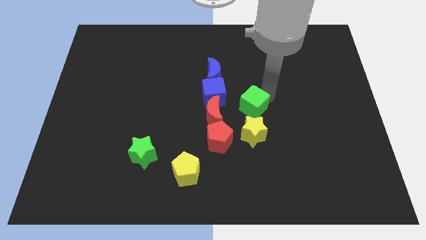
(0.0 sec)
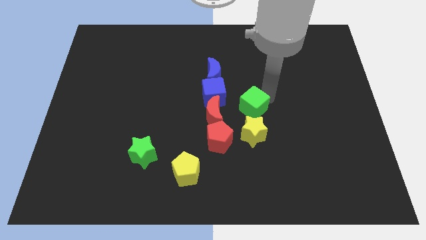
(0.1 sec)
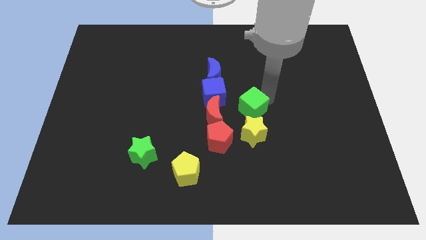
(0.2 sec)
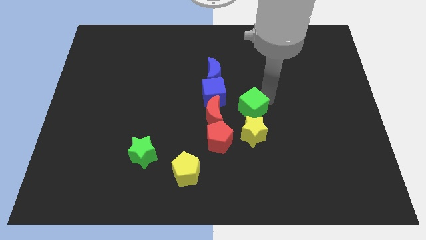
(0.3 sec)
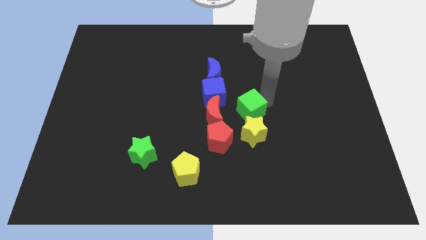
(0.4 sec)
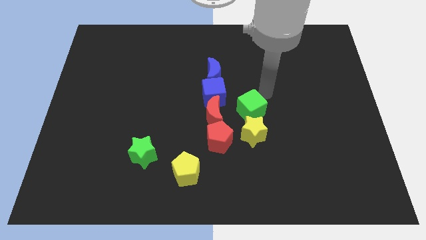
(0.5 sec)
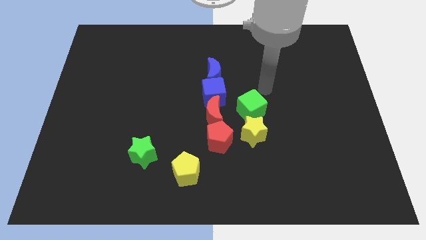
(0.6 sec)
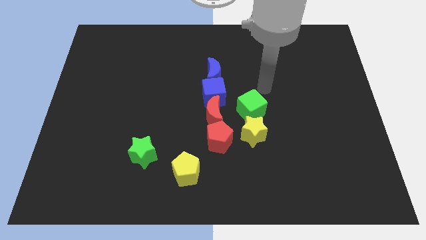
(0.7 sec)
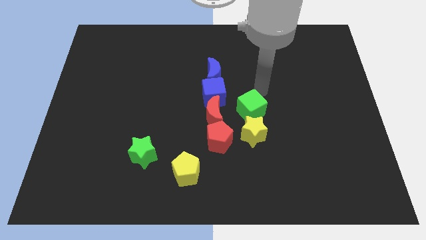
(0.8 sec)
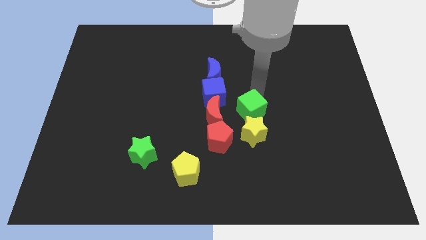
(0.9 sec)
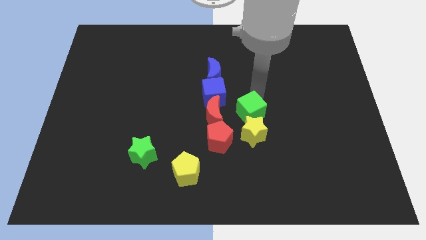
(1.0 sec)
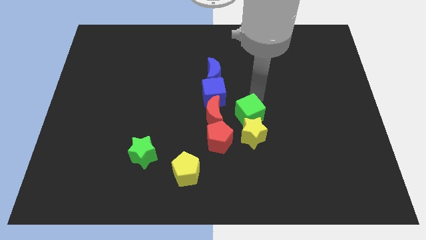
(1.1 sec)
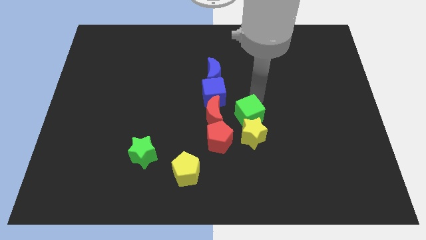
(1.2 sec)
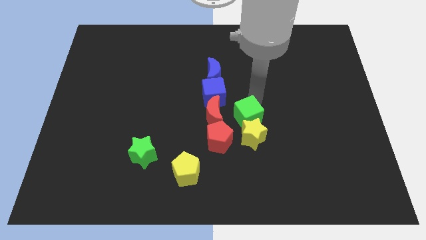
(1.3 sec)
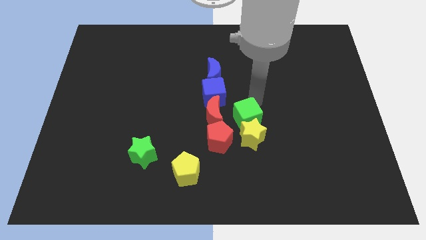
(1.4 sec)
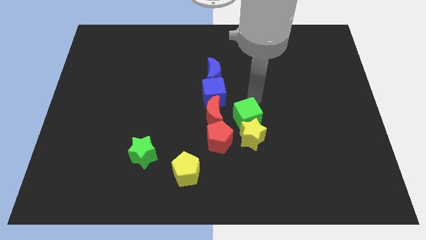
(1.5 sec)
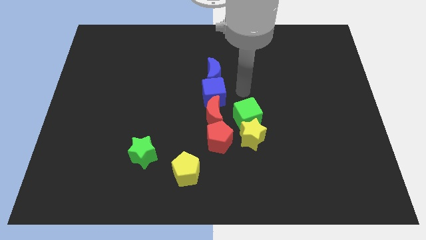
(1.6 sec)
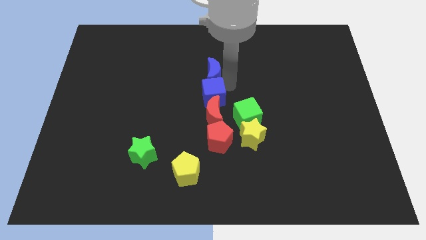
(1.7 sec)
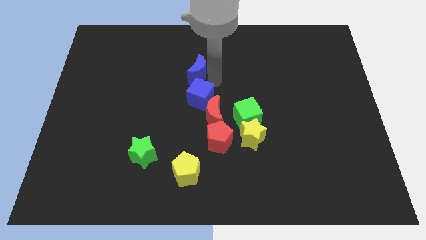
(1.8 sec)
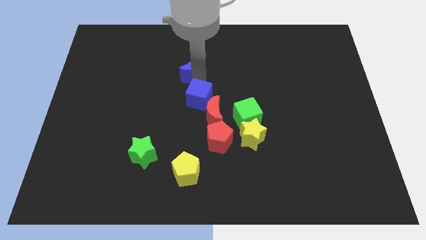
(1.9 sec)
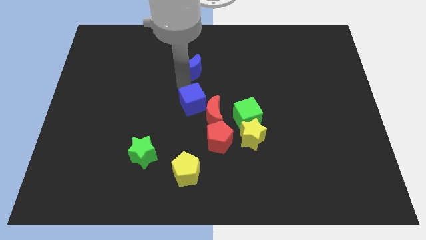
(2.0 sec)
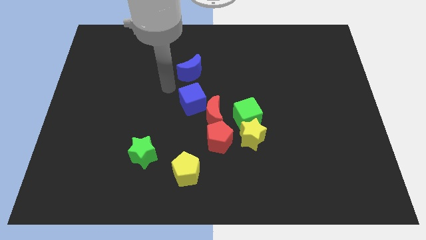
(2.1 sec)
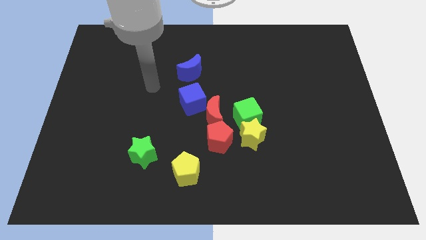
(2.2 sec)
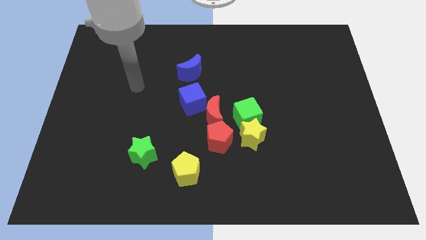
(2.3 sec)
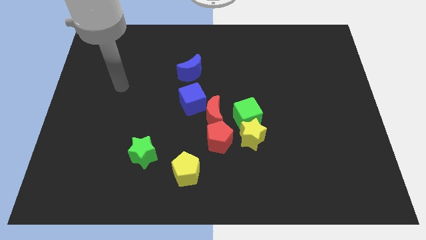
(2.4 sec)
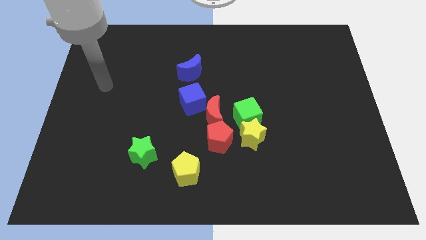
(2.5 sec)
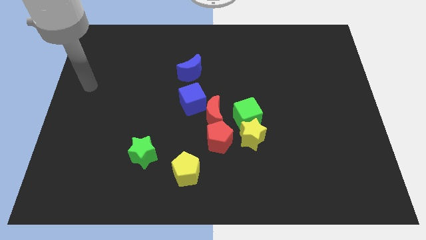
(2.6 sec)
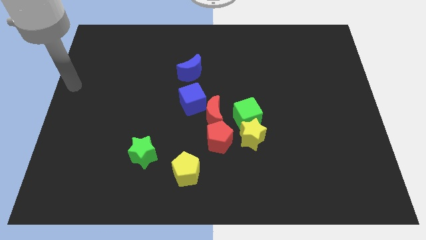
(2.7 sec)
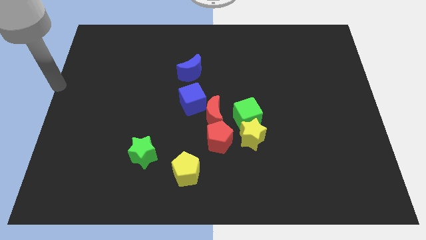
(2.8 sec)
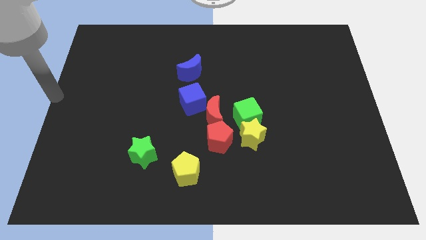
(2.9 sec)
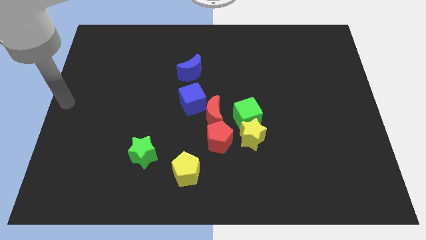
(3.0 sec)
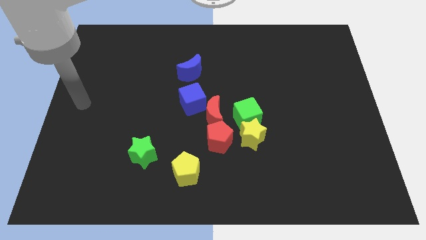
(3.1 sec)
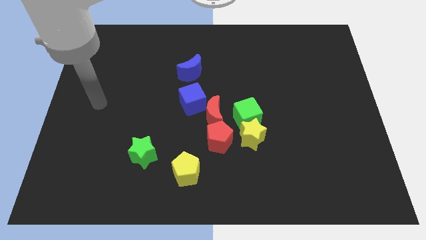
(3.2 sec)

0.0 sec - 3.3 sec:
separate blue crescent with blue cube

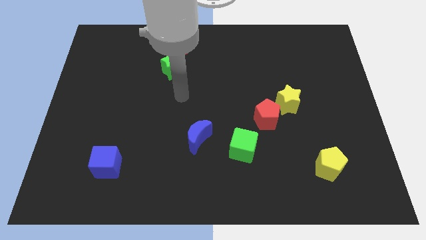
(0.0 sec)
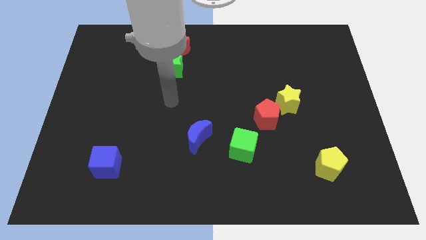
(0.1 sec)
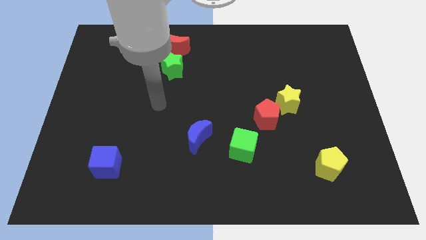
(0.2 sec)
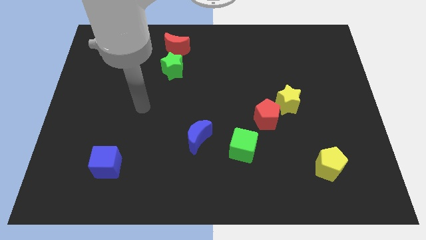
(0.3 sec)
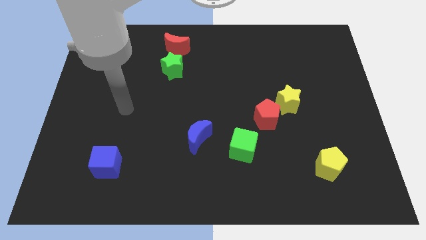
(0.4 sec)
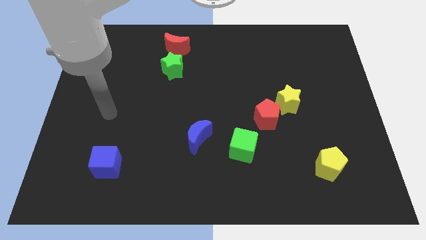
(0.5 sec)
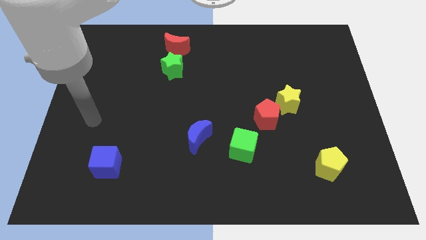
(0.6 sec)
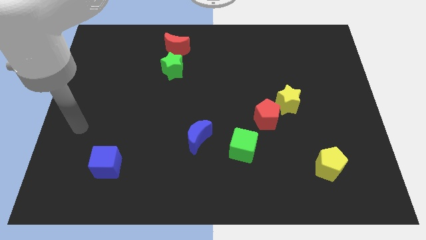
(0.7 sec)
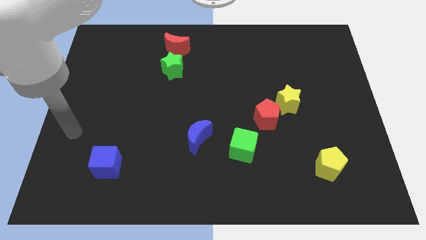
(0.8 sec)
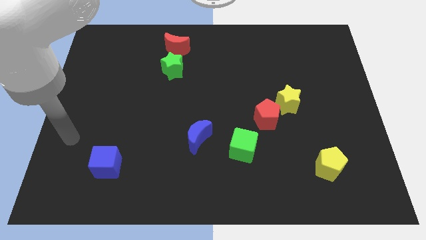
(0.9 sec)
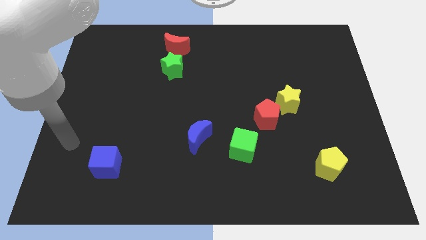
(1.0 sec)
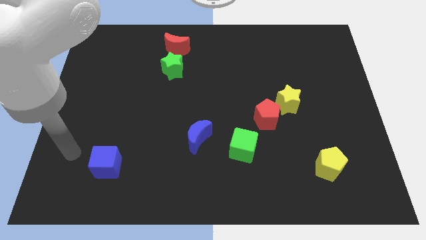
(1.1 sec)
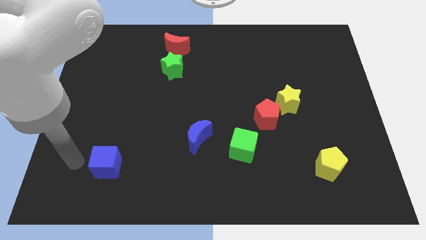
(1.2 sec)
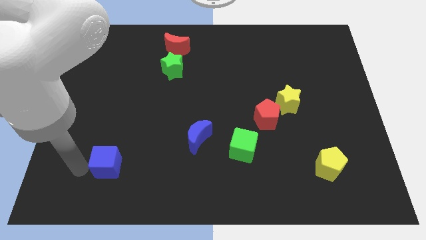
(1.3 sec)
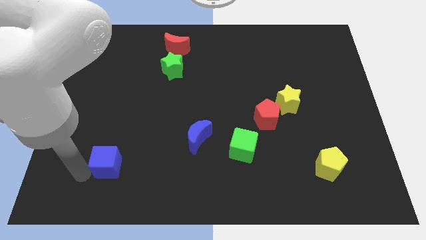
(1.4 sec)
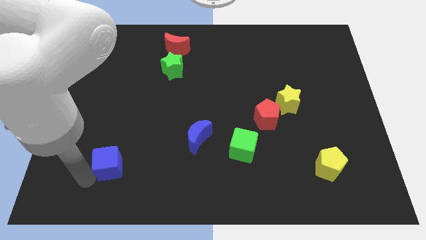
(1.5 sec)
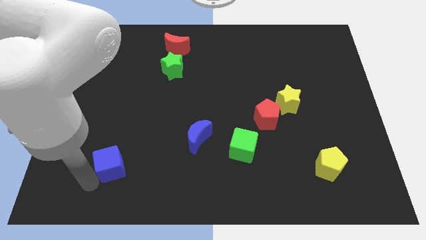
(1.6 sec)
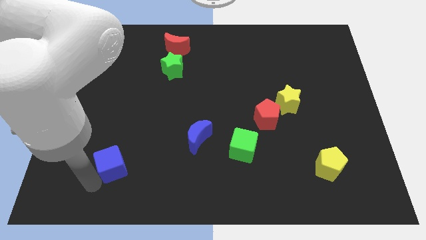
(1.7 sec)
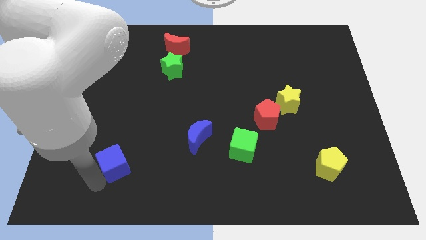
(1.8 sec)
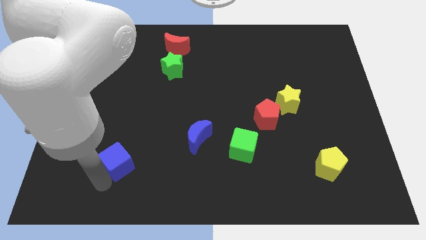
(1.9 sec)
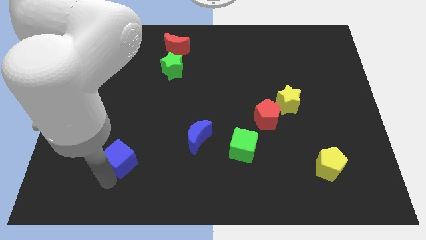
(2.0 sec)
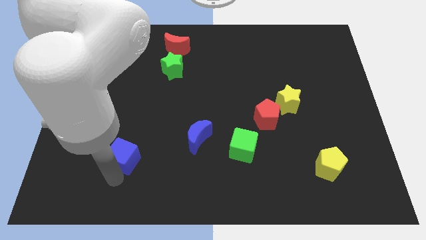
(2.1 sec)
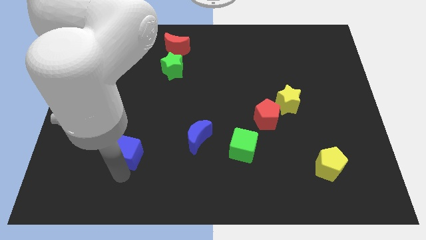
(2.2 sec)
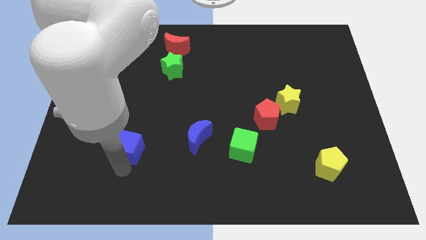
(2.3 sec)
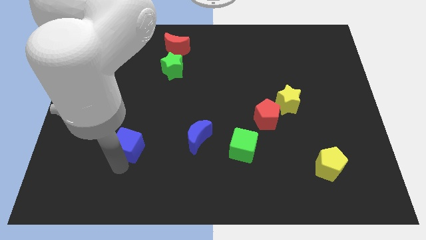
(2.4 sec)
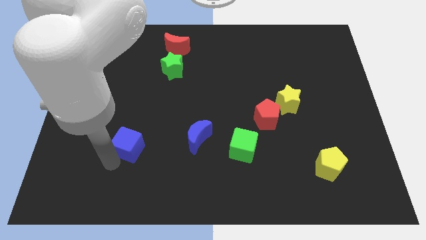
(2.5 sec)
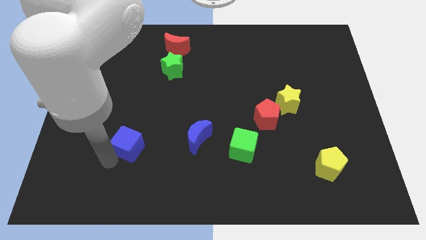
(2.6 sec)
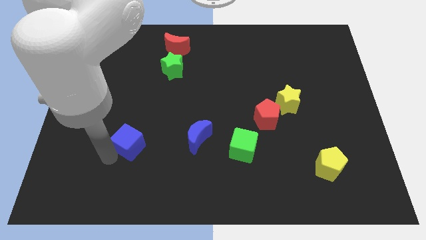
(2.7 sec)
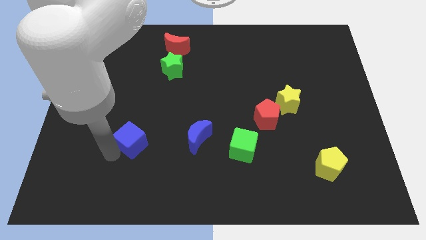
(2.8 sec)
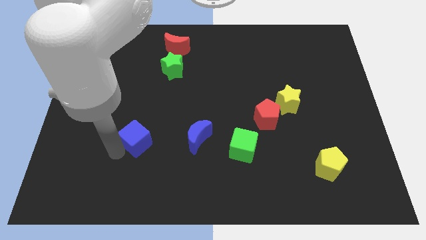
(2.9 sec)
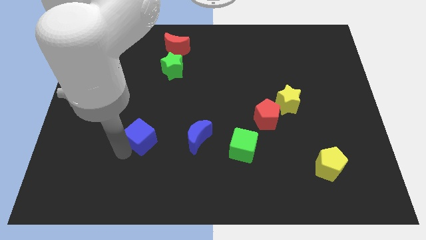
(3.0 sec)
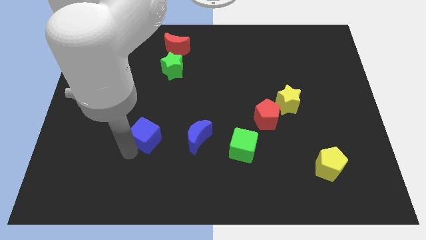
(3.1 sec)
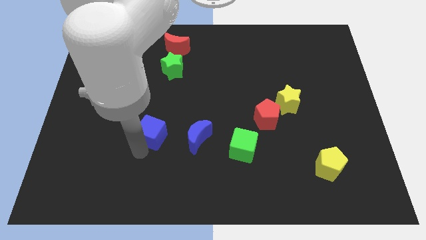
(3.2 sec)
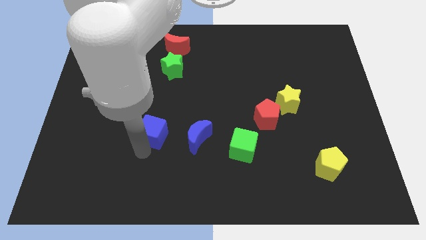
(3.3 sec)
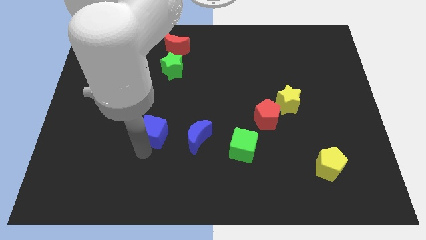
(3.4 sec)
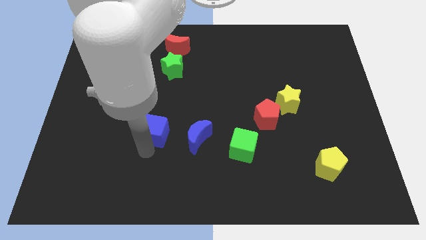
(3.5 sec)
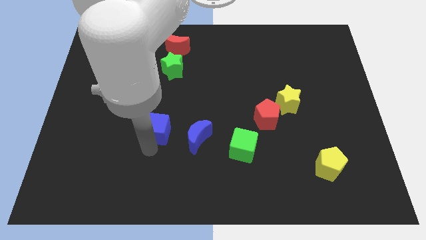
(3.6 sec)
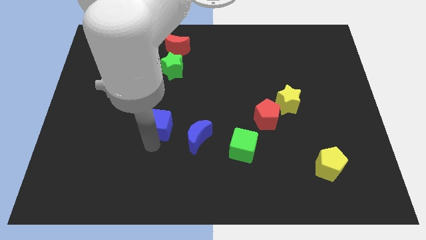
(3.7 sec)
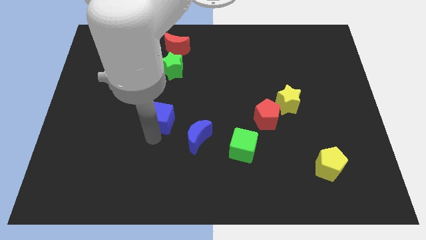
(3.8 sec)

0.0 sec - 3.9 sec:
move the blue cube to the left of the blue crescent

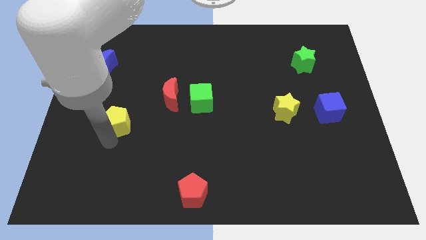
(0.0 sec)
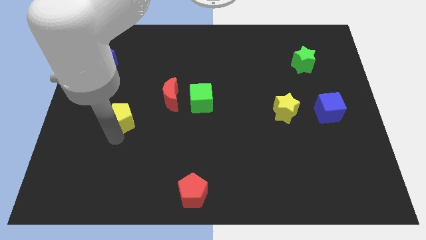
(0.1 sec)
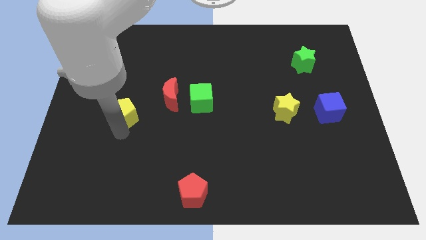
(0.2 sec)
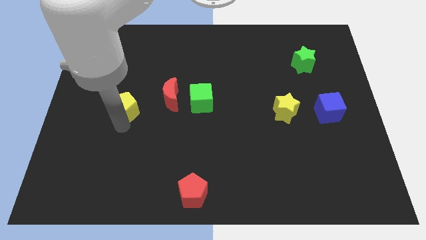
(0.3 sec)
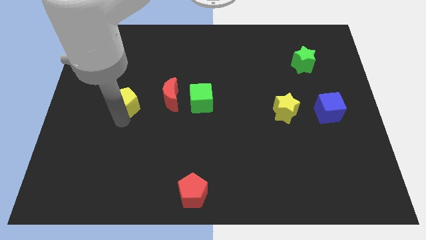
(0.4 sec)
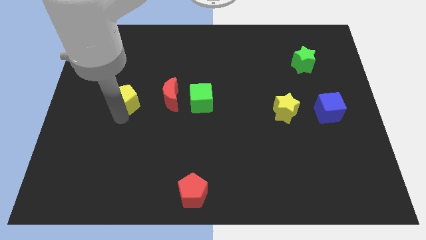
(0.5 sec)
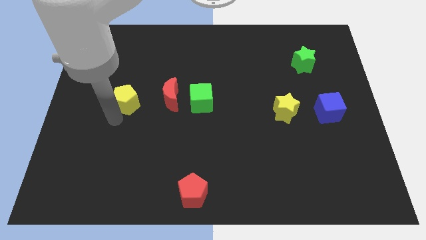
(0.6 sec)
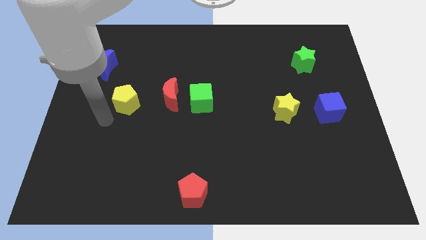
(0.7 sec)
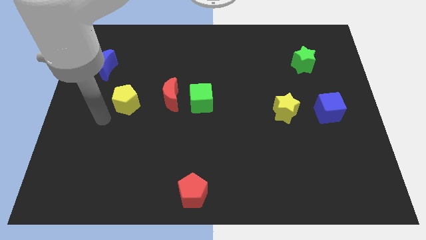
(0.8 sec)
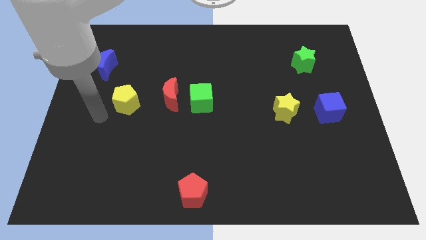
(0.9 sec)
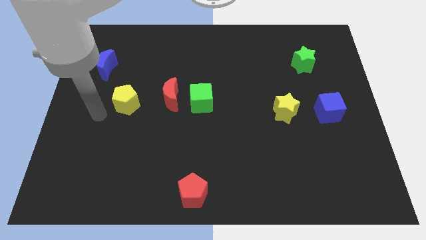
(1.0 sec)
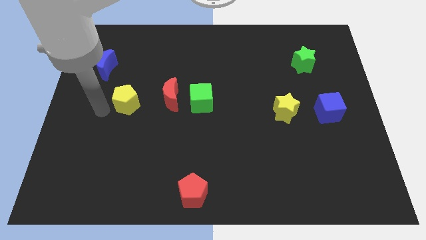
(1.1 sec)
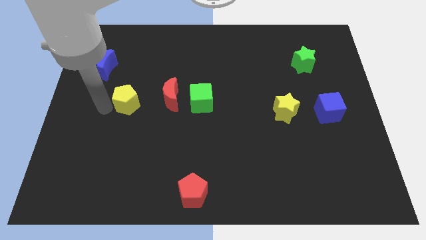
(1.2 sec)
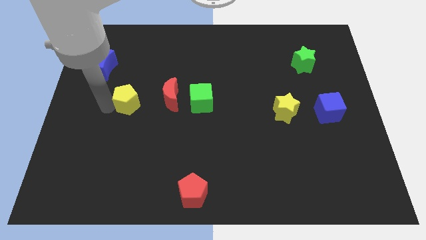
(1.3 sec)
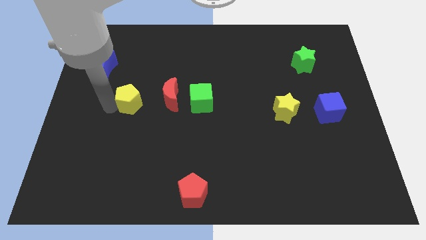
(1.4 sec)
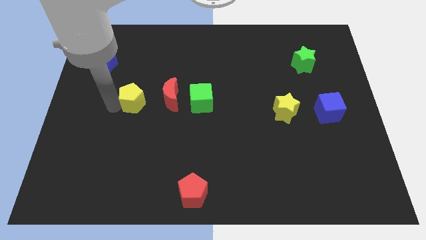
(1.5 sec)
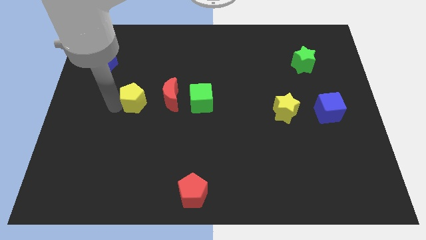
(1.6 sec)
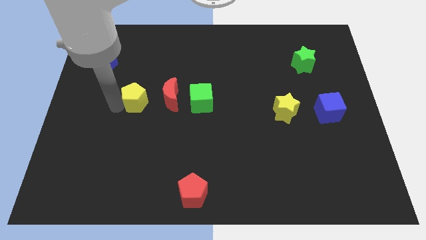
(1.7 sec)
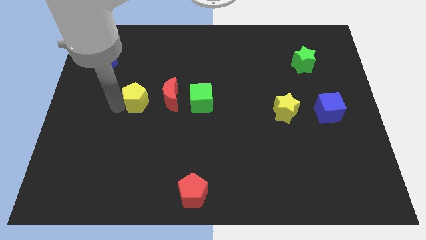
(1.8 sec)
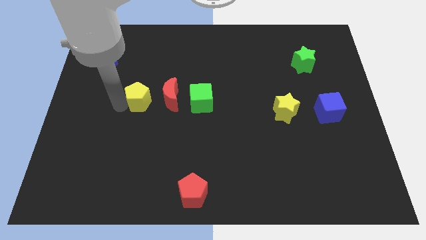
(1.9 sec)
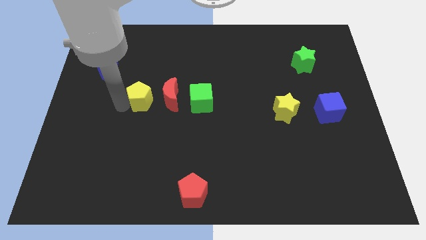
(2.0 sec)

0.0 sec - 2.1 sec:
place the yellow pentagon to the left of the red crescent
